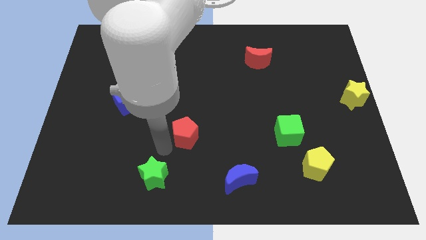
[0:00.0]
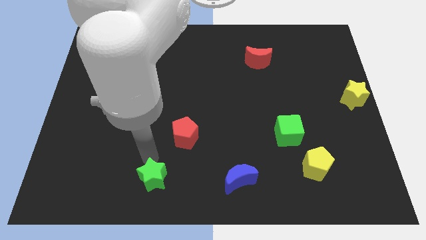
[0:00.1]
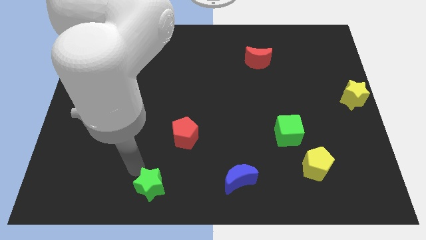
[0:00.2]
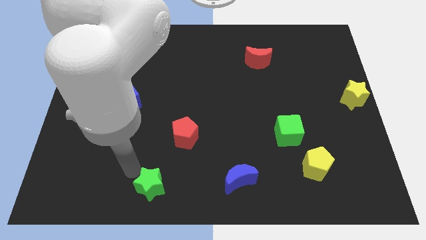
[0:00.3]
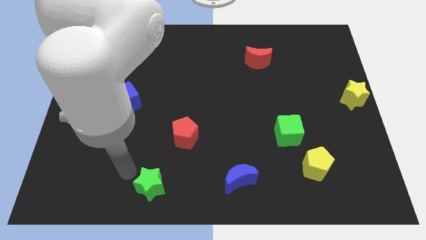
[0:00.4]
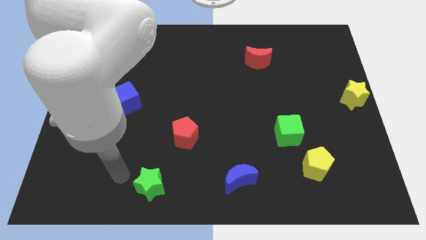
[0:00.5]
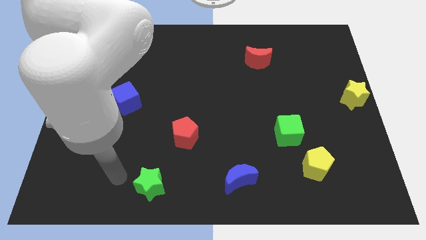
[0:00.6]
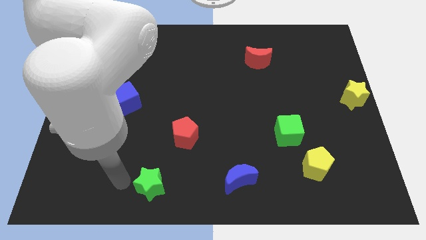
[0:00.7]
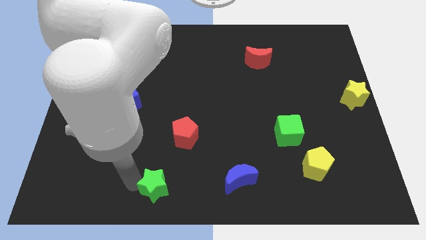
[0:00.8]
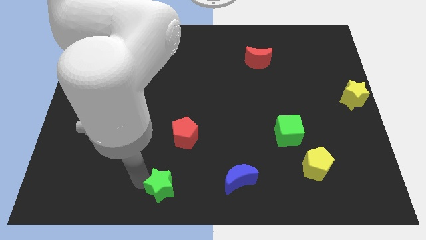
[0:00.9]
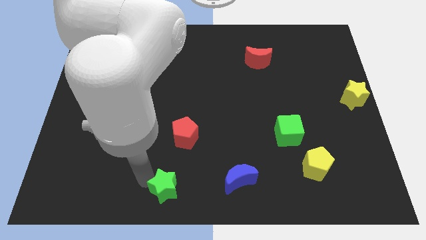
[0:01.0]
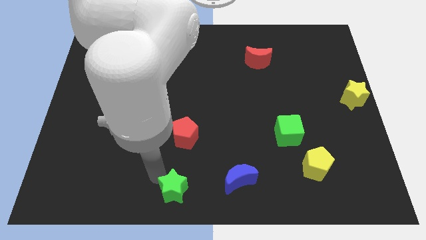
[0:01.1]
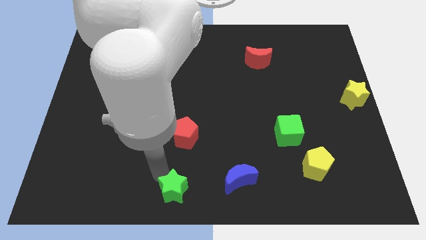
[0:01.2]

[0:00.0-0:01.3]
move the green star to the left of the blue crescent

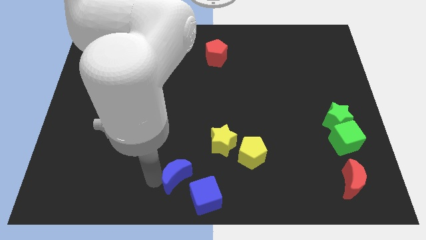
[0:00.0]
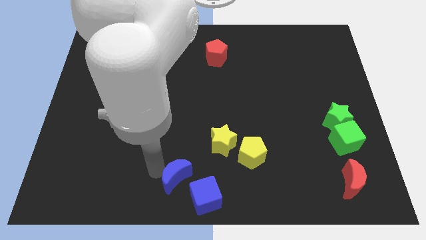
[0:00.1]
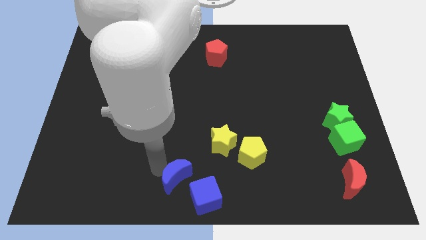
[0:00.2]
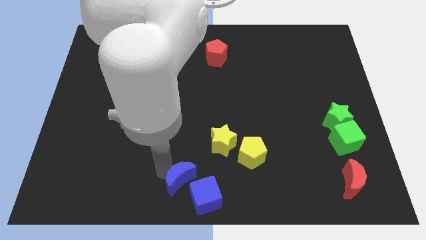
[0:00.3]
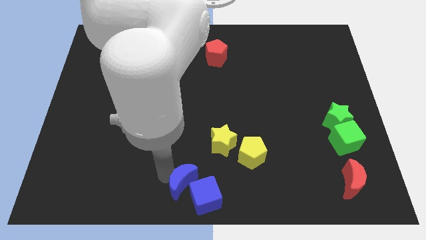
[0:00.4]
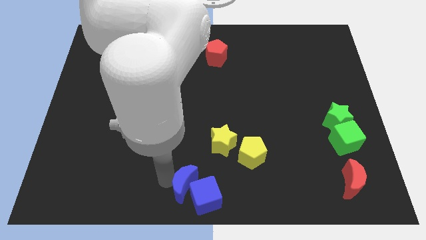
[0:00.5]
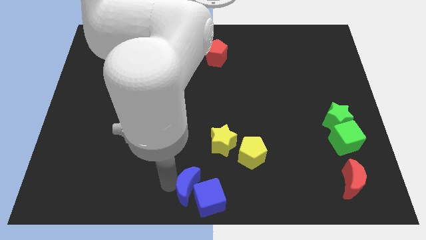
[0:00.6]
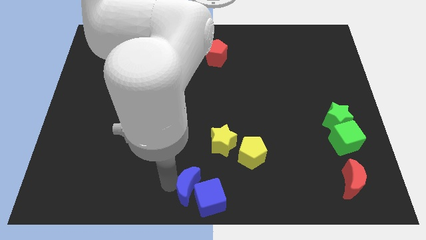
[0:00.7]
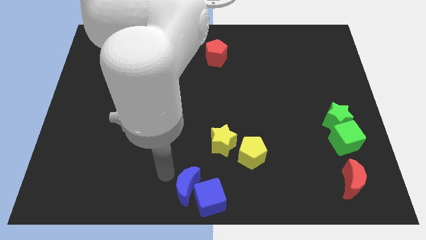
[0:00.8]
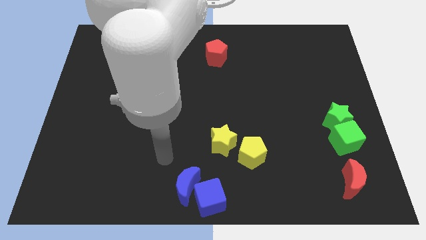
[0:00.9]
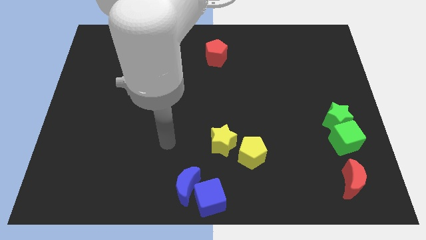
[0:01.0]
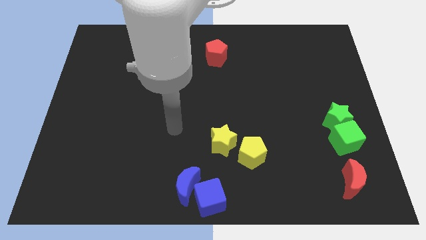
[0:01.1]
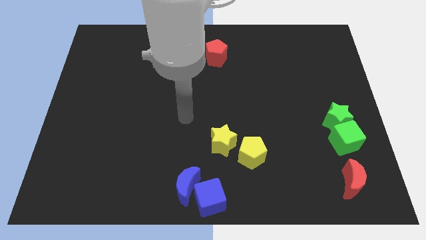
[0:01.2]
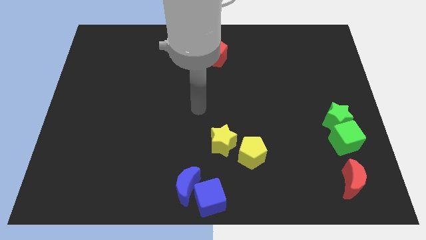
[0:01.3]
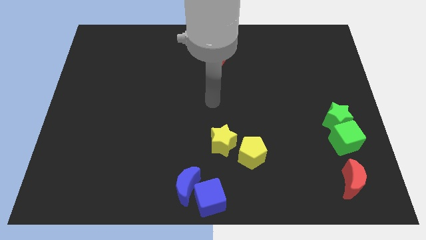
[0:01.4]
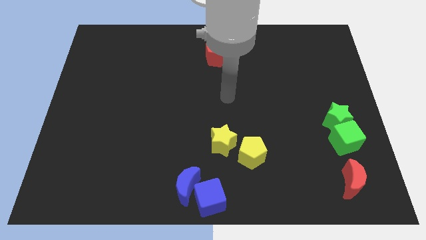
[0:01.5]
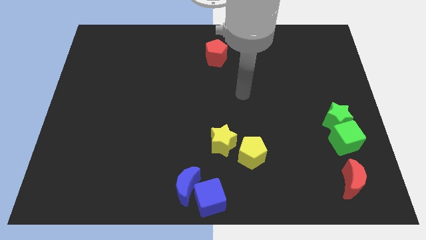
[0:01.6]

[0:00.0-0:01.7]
put the blue moon and blue cube together

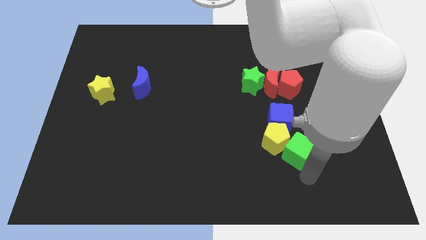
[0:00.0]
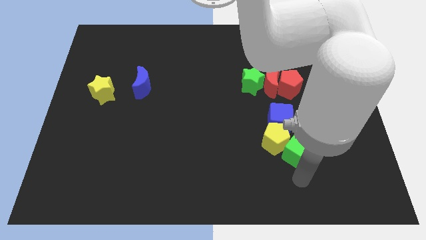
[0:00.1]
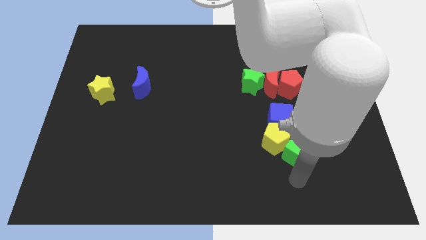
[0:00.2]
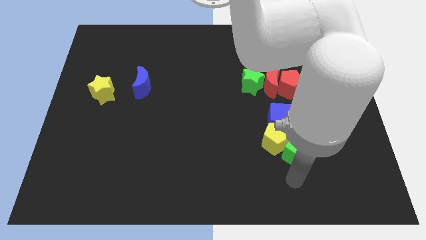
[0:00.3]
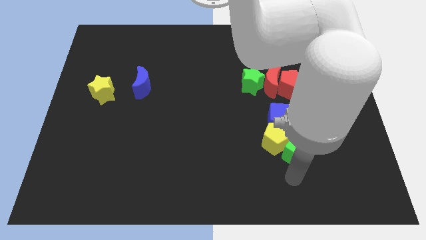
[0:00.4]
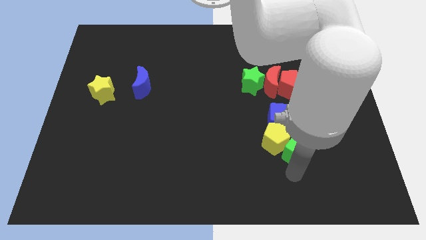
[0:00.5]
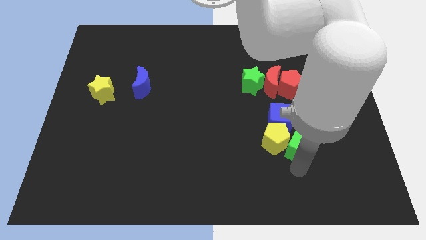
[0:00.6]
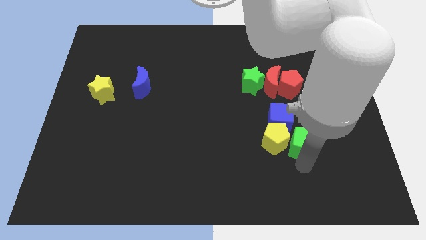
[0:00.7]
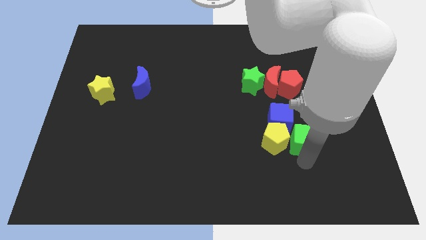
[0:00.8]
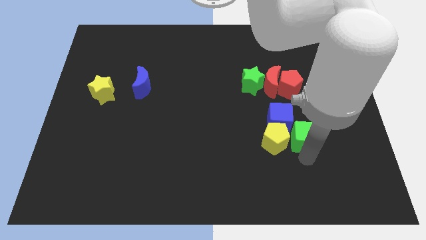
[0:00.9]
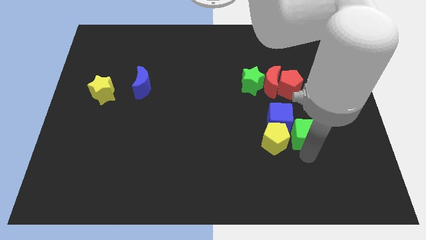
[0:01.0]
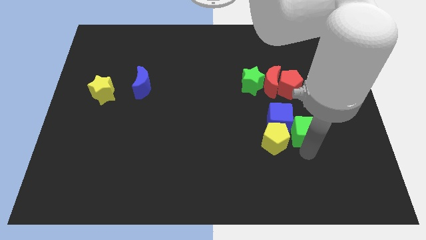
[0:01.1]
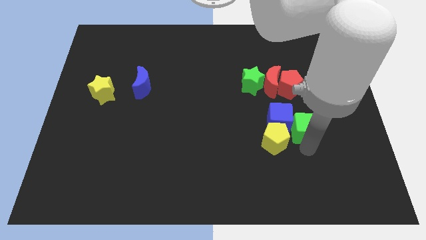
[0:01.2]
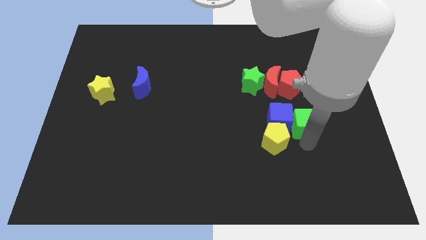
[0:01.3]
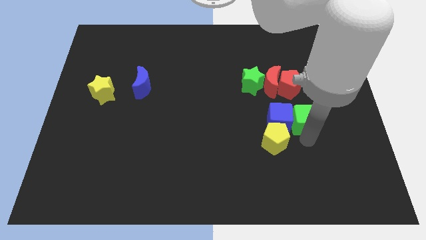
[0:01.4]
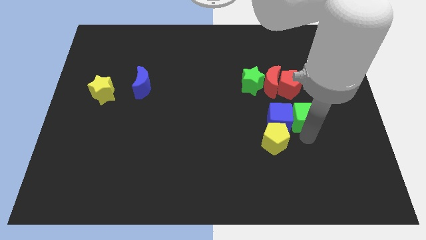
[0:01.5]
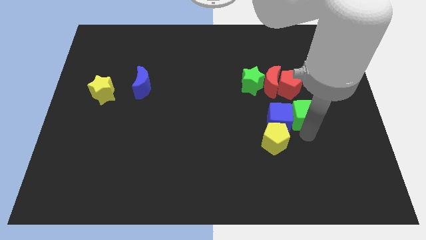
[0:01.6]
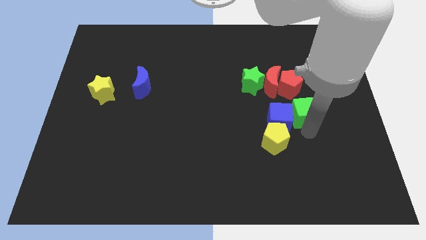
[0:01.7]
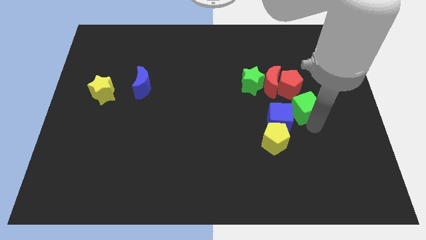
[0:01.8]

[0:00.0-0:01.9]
slightly push the green cube towards the red pentagon

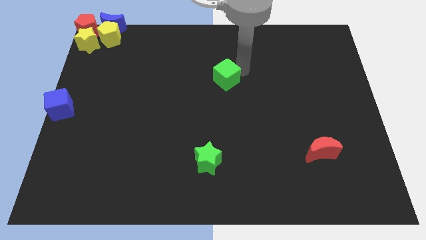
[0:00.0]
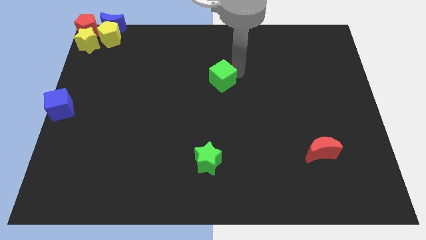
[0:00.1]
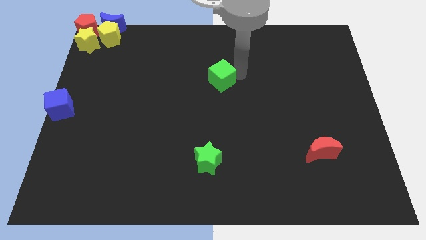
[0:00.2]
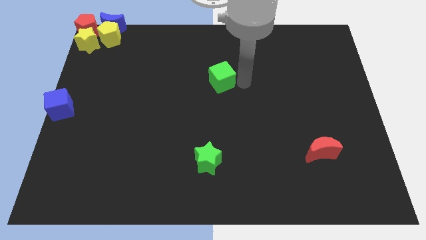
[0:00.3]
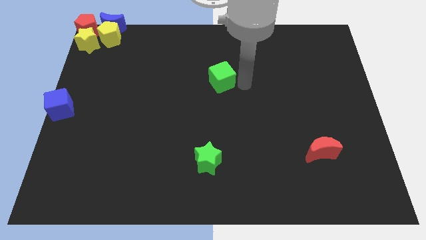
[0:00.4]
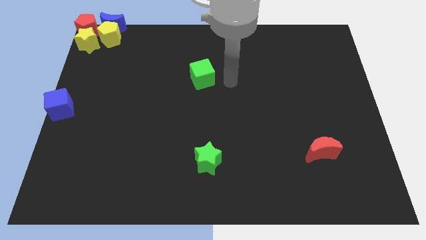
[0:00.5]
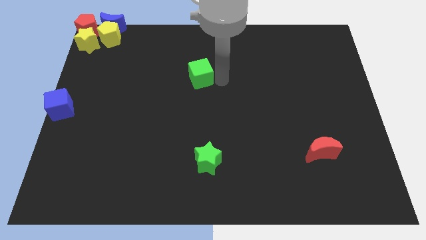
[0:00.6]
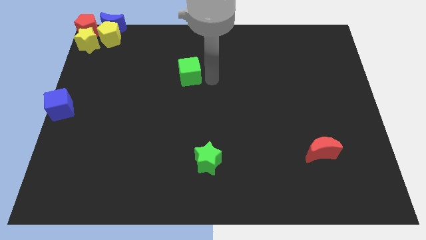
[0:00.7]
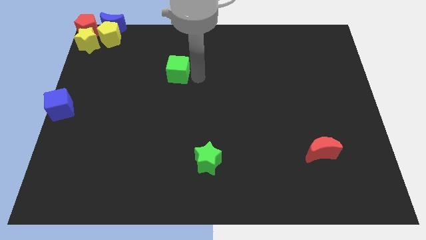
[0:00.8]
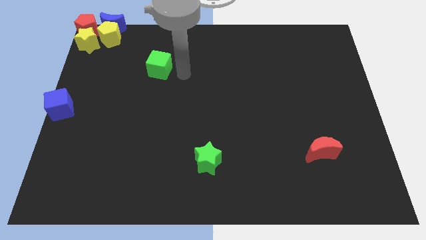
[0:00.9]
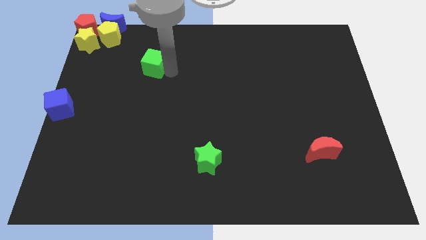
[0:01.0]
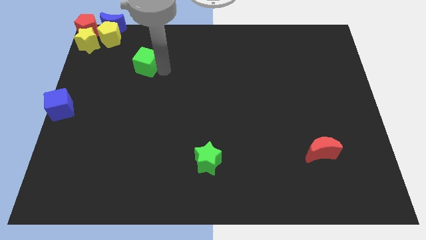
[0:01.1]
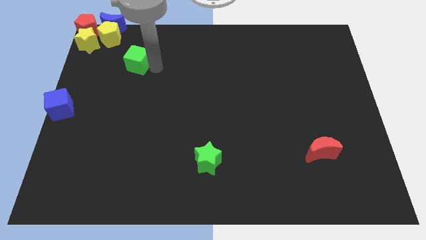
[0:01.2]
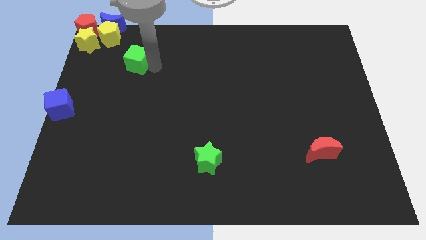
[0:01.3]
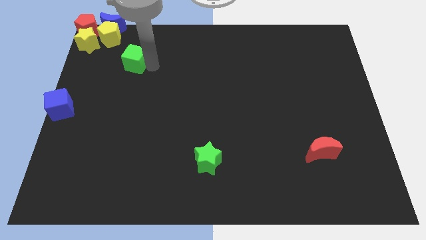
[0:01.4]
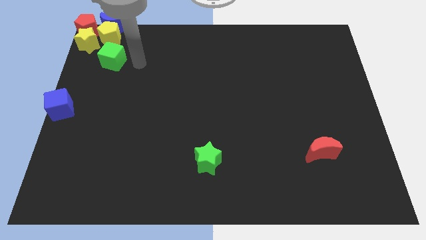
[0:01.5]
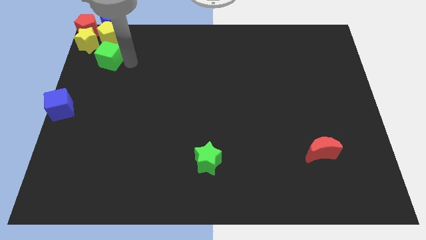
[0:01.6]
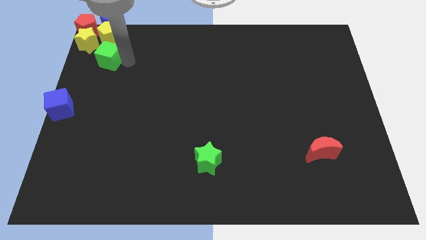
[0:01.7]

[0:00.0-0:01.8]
move the green cube towards the bottom of the yellow pentagon

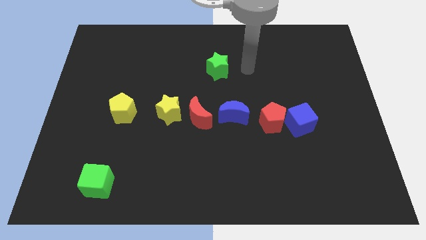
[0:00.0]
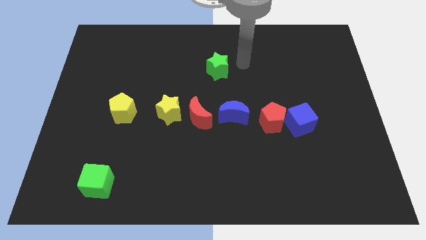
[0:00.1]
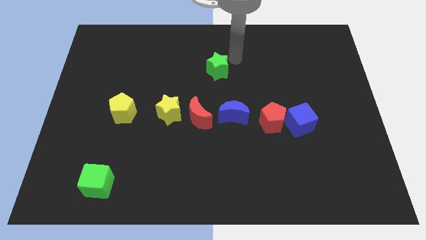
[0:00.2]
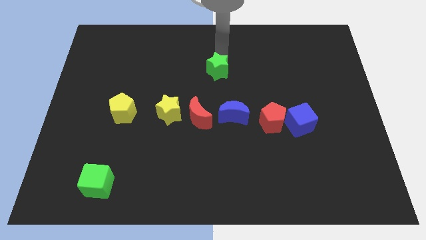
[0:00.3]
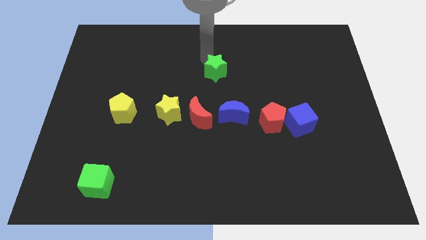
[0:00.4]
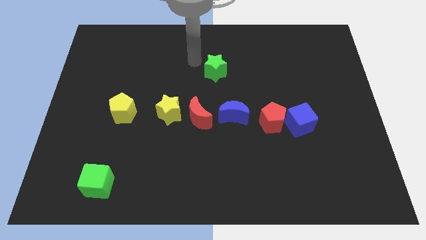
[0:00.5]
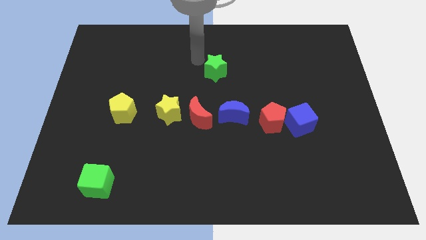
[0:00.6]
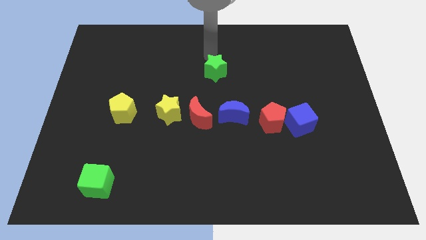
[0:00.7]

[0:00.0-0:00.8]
move arm above green star

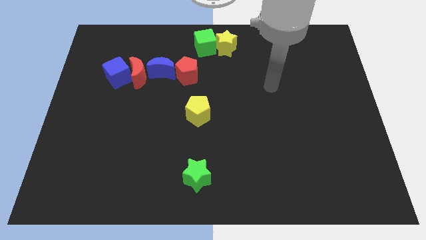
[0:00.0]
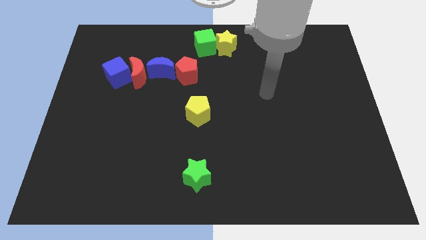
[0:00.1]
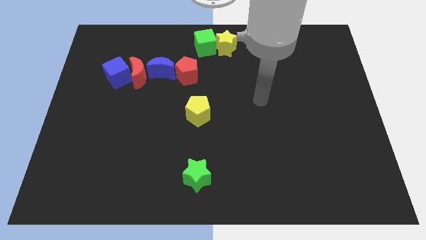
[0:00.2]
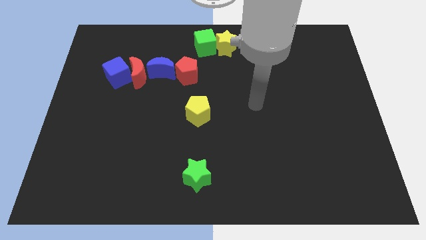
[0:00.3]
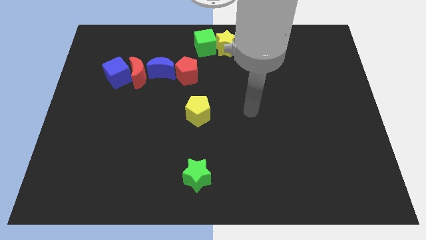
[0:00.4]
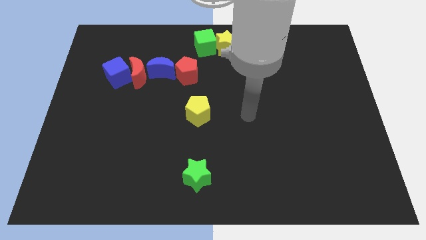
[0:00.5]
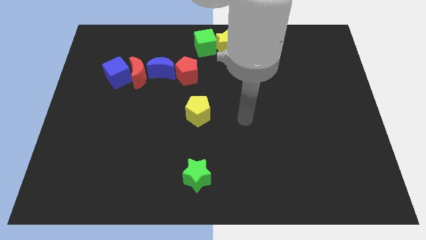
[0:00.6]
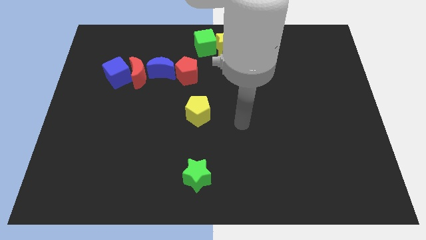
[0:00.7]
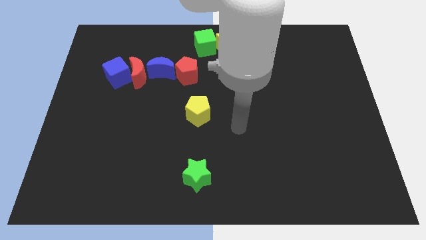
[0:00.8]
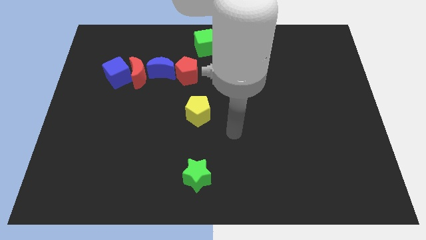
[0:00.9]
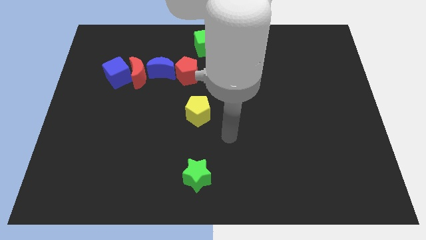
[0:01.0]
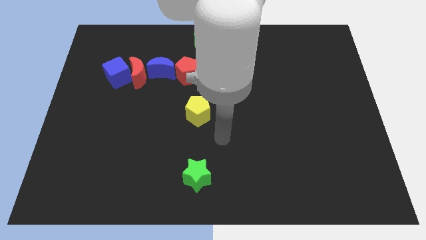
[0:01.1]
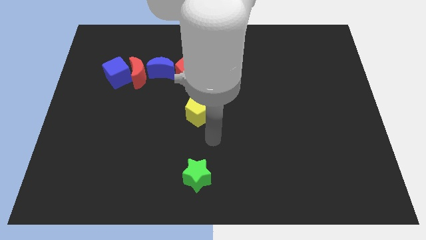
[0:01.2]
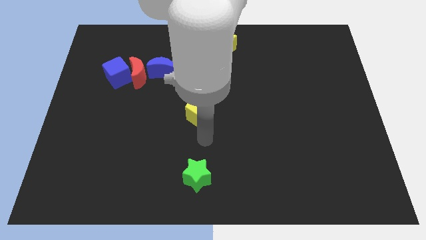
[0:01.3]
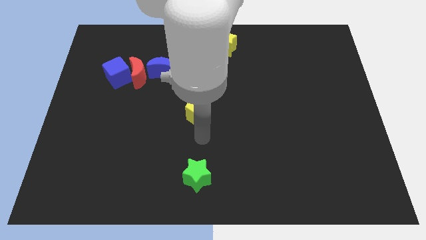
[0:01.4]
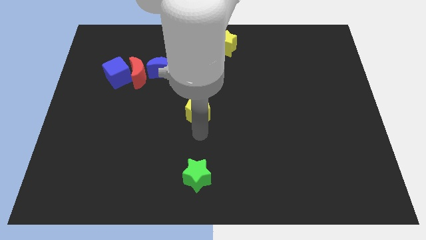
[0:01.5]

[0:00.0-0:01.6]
move your arm towards the yellow pentagon at the center of the board
